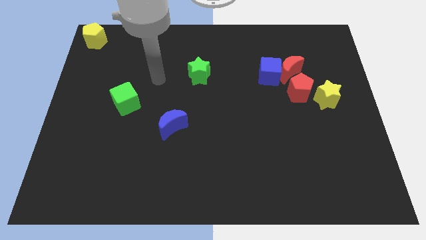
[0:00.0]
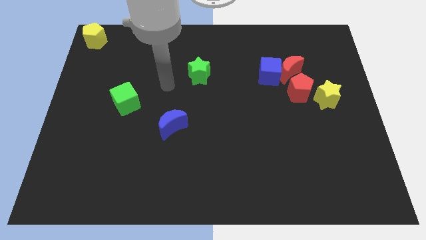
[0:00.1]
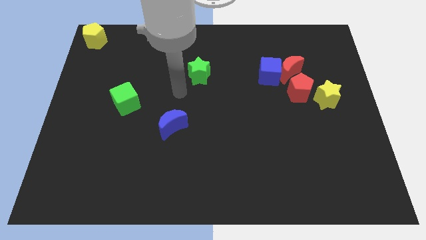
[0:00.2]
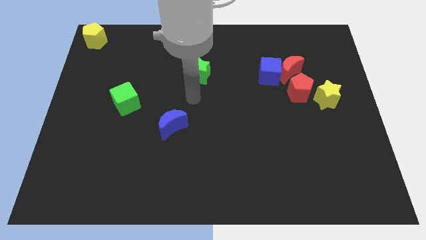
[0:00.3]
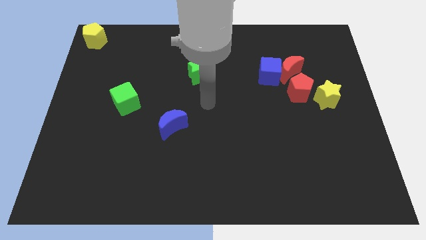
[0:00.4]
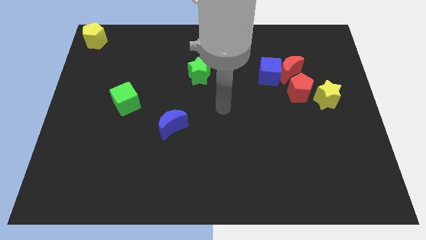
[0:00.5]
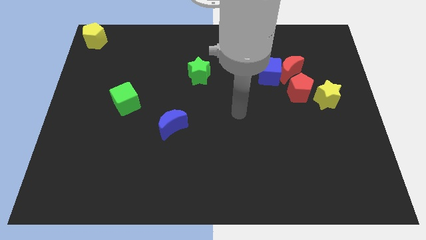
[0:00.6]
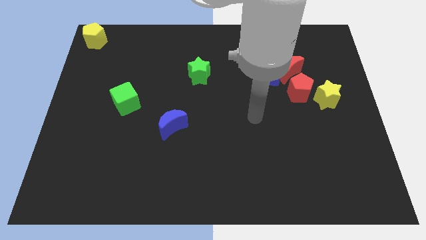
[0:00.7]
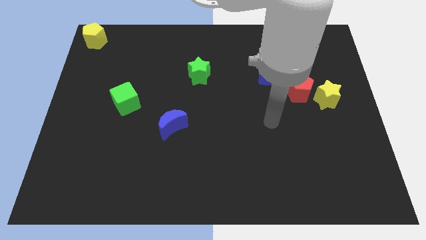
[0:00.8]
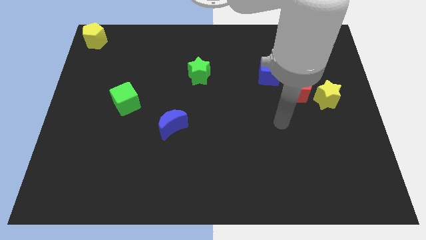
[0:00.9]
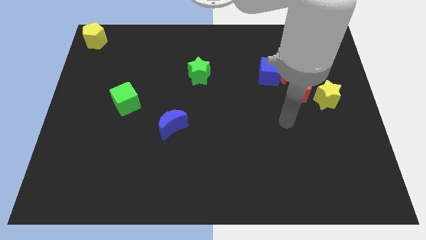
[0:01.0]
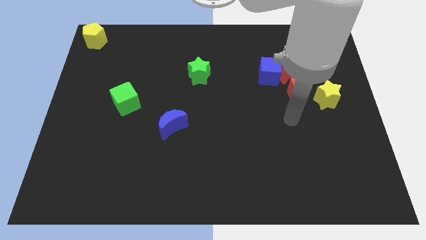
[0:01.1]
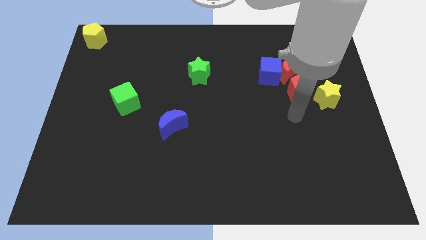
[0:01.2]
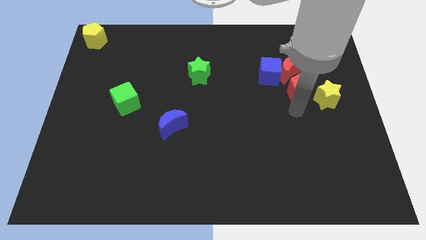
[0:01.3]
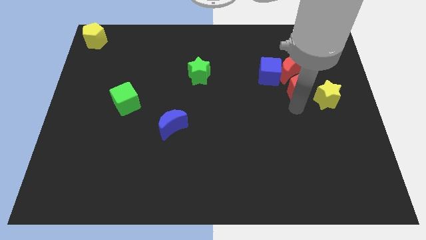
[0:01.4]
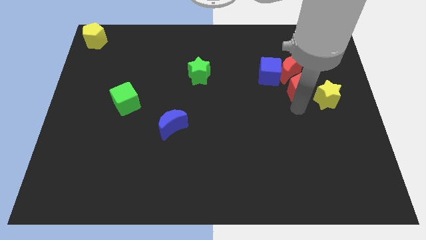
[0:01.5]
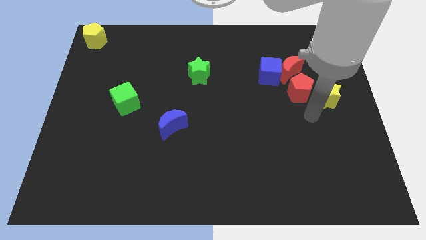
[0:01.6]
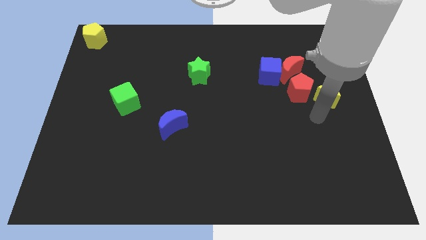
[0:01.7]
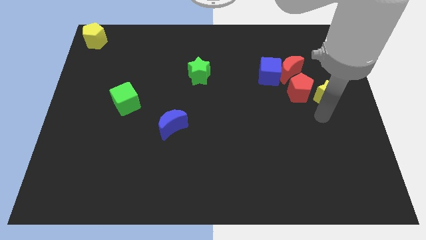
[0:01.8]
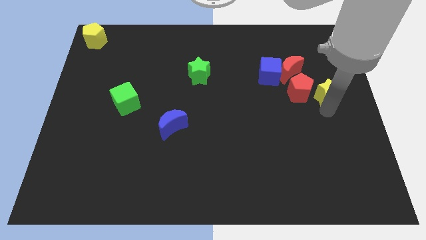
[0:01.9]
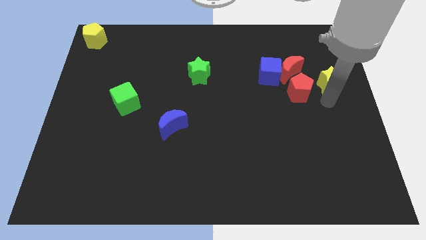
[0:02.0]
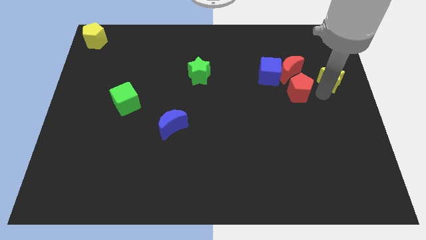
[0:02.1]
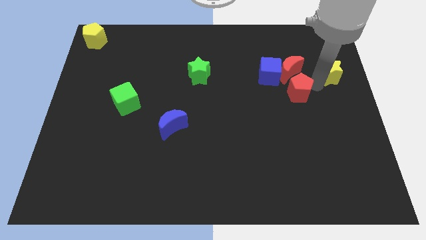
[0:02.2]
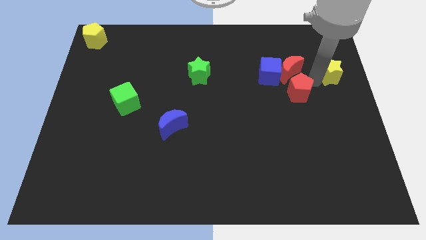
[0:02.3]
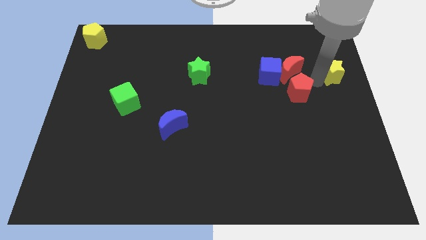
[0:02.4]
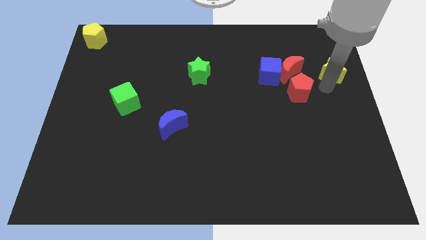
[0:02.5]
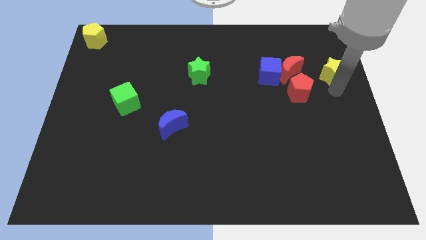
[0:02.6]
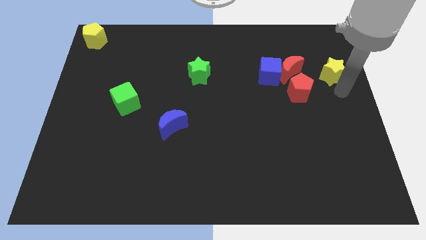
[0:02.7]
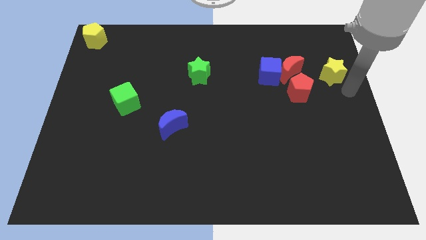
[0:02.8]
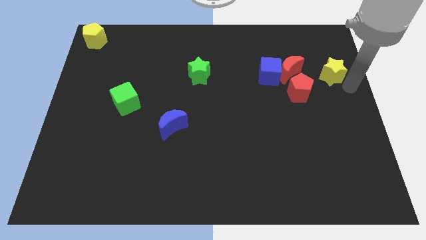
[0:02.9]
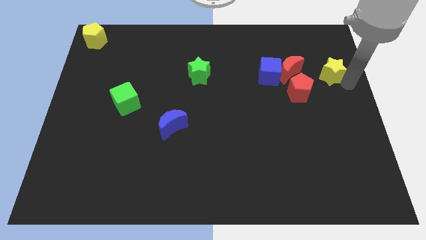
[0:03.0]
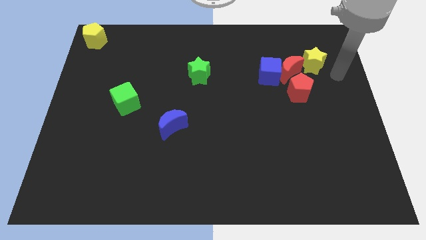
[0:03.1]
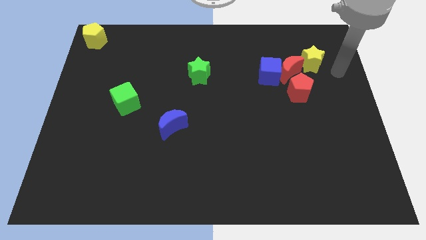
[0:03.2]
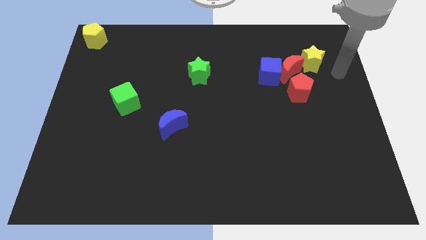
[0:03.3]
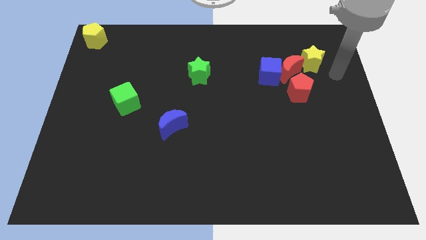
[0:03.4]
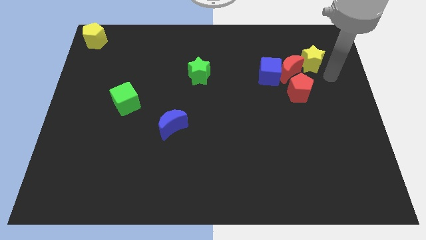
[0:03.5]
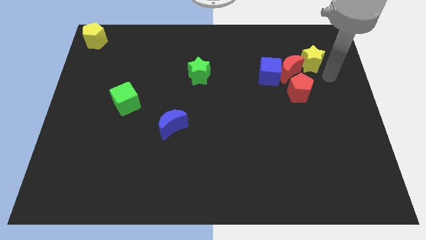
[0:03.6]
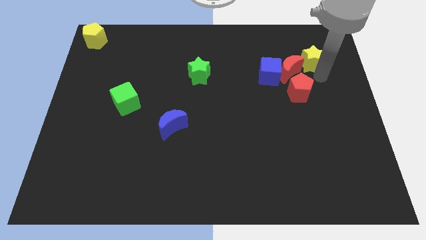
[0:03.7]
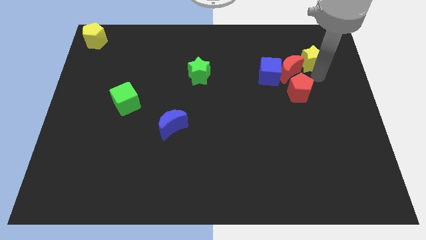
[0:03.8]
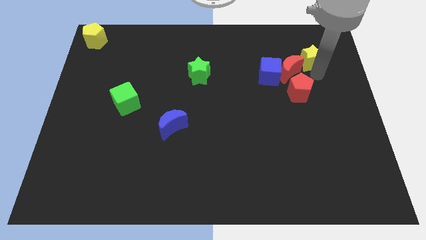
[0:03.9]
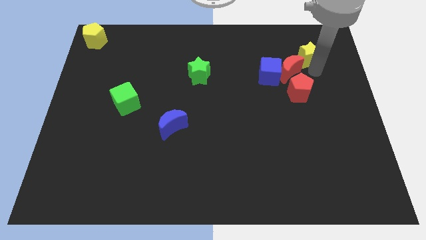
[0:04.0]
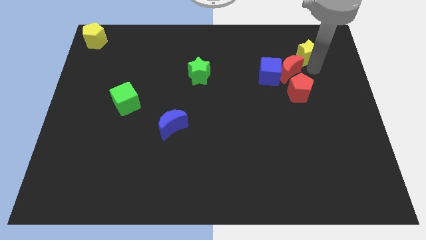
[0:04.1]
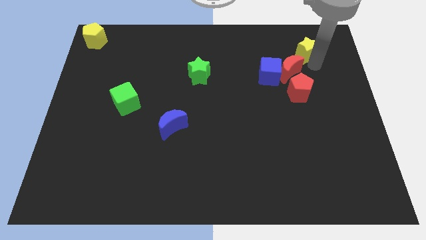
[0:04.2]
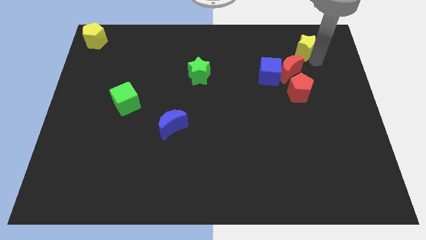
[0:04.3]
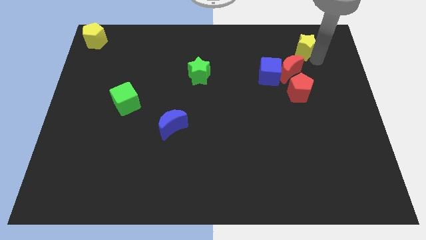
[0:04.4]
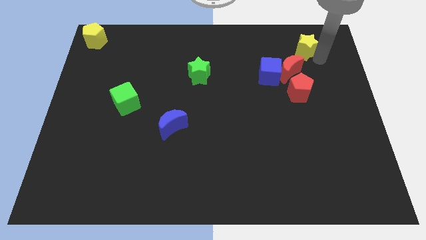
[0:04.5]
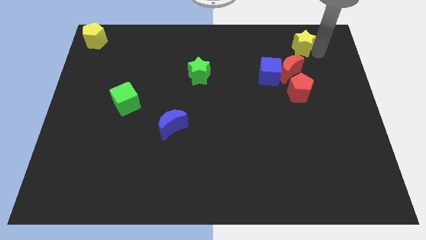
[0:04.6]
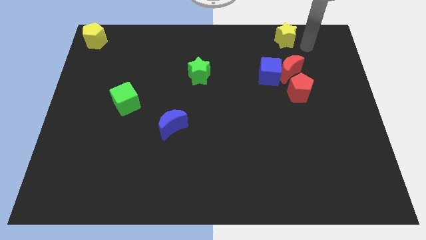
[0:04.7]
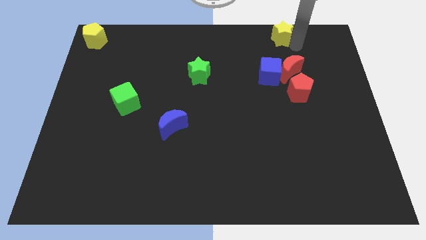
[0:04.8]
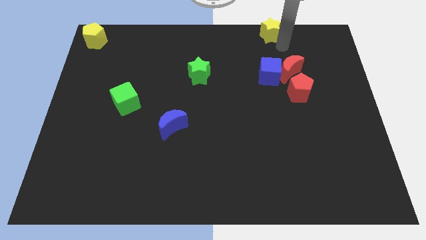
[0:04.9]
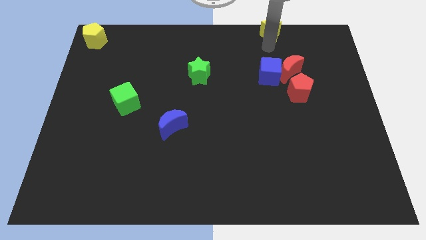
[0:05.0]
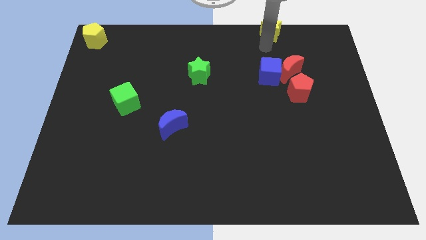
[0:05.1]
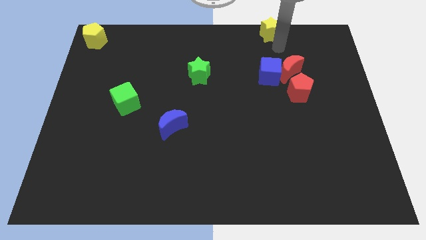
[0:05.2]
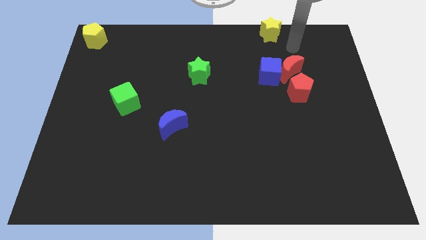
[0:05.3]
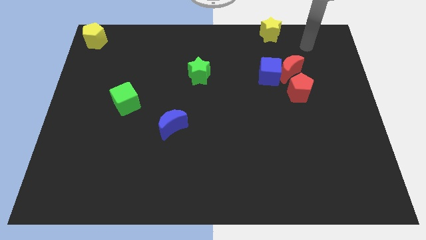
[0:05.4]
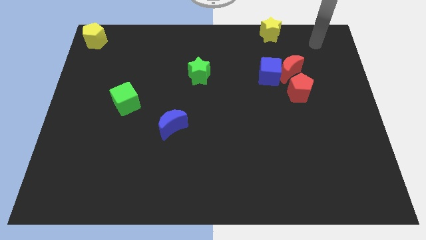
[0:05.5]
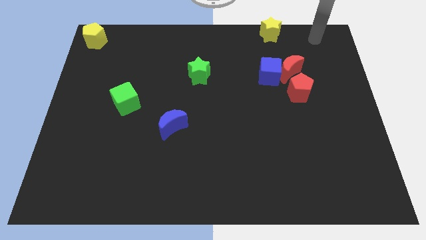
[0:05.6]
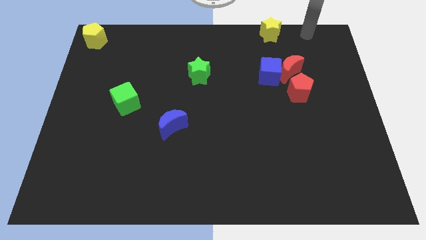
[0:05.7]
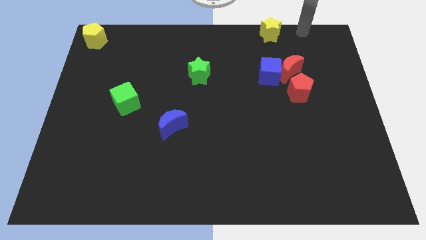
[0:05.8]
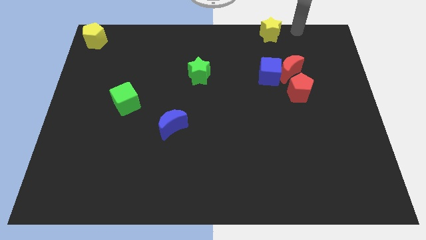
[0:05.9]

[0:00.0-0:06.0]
place the yellow star above the blue cube

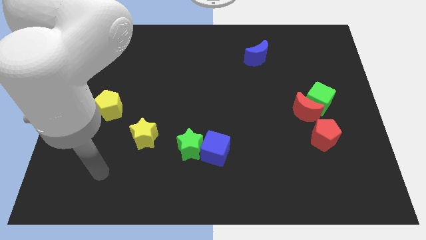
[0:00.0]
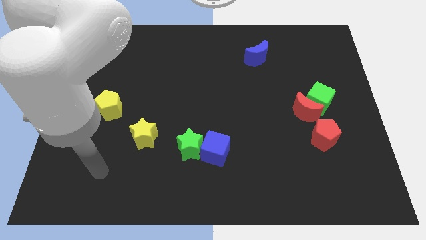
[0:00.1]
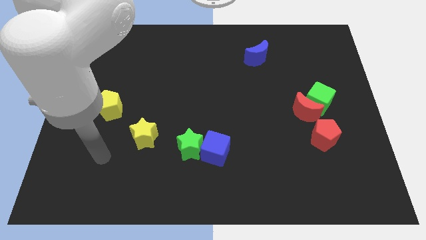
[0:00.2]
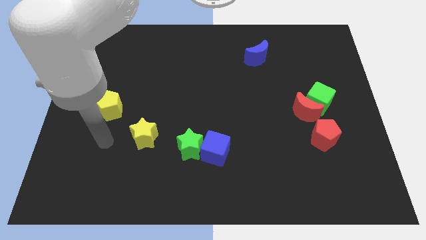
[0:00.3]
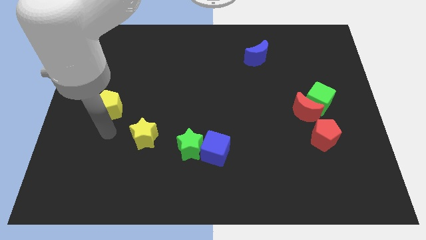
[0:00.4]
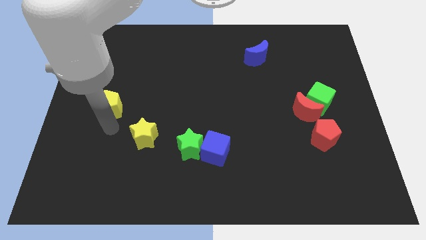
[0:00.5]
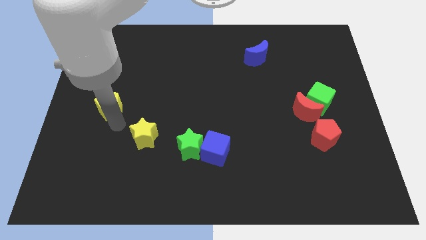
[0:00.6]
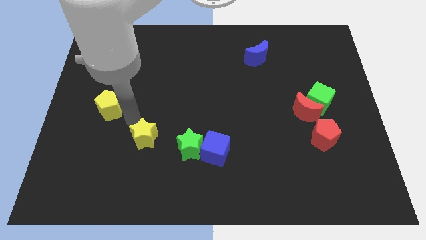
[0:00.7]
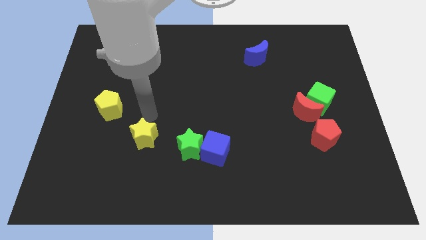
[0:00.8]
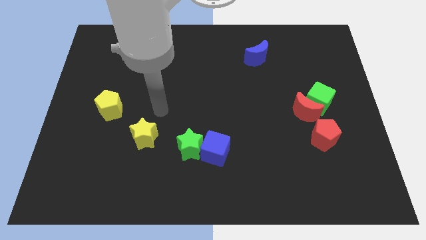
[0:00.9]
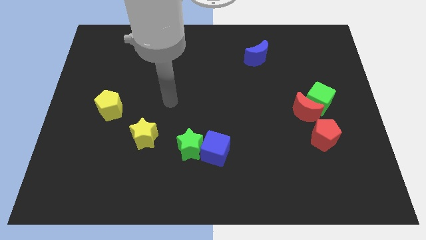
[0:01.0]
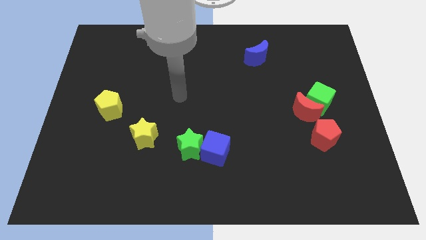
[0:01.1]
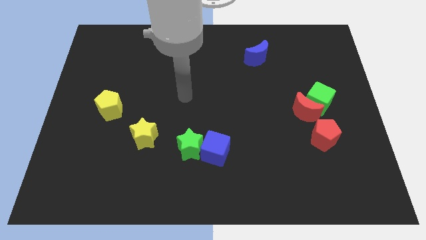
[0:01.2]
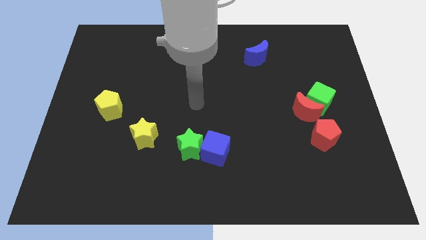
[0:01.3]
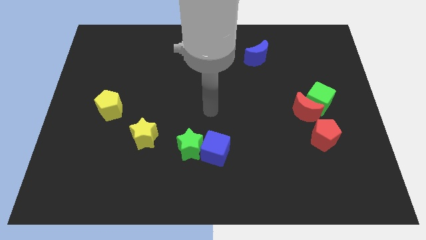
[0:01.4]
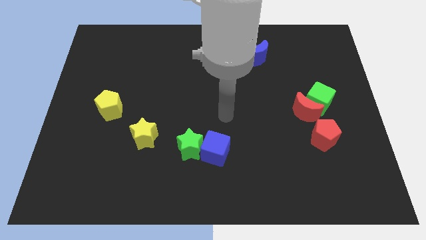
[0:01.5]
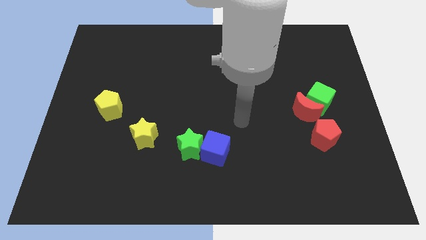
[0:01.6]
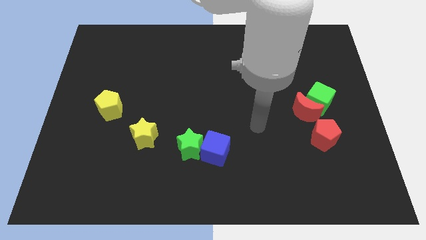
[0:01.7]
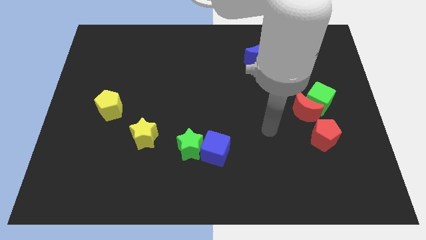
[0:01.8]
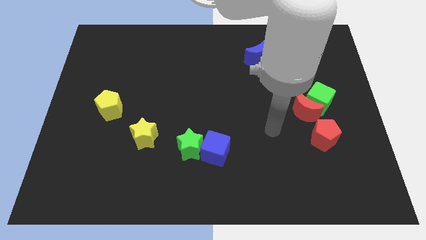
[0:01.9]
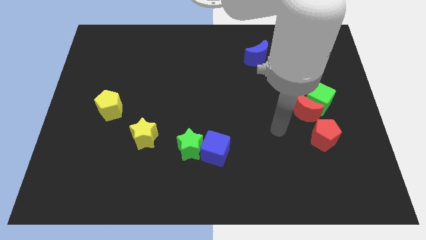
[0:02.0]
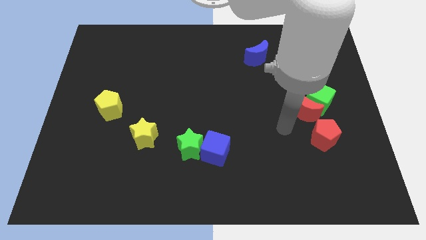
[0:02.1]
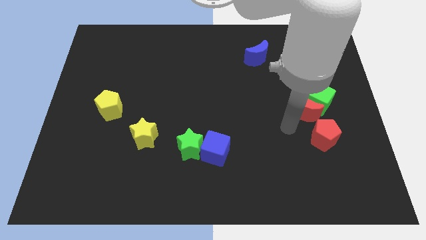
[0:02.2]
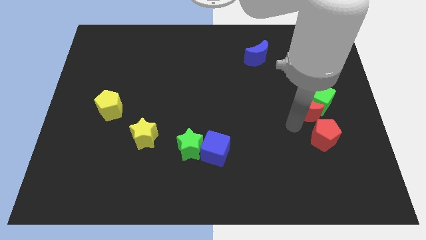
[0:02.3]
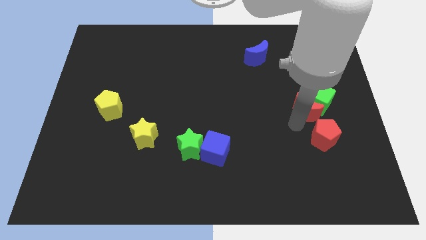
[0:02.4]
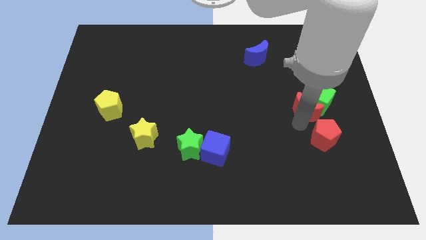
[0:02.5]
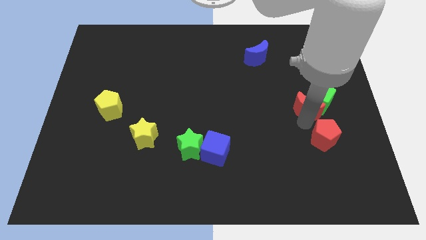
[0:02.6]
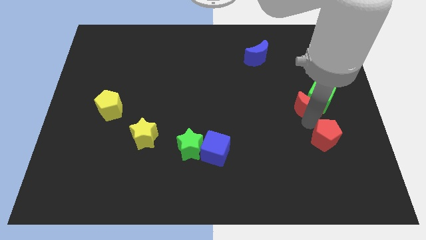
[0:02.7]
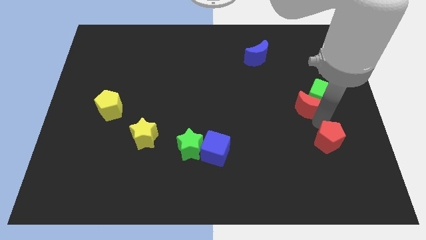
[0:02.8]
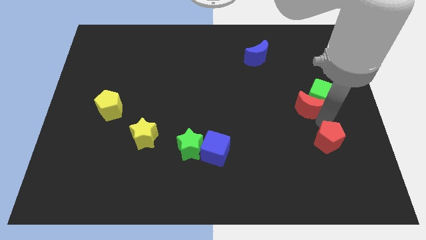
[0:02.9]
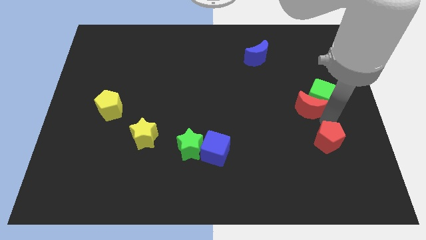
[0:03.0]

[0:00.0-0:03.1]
place your arm in between red blocks
